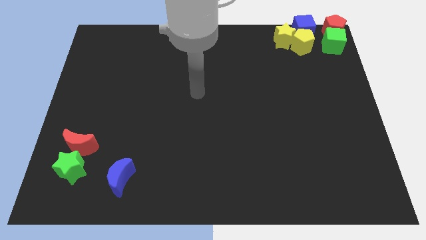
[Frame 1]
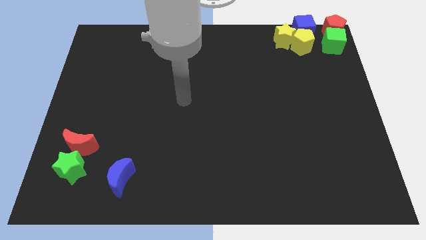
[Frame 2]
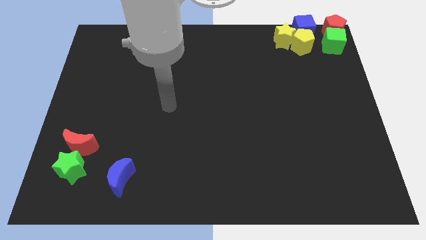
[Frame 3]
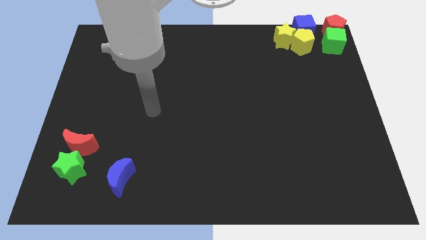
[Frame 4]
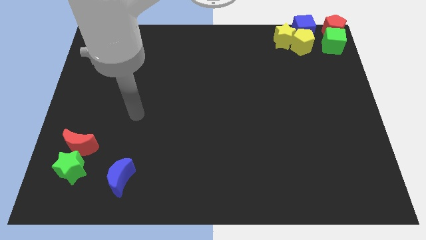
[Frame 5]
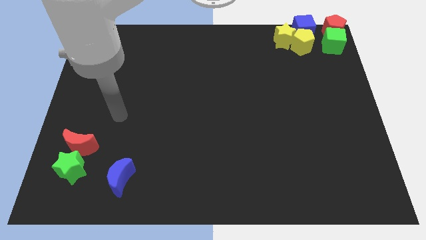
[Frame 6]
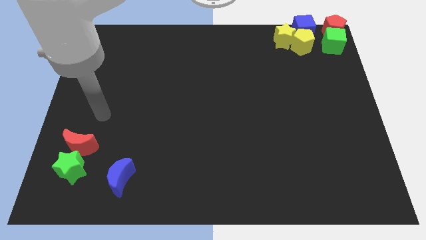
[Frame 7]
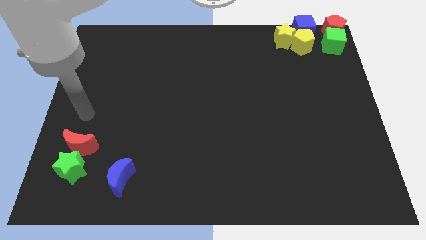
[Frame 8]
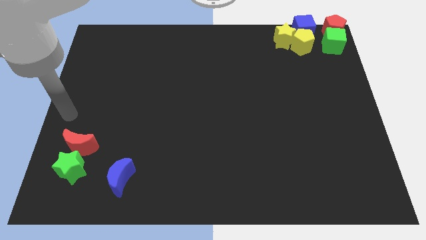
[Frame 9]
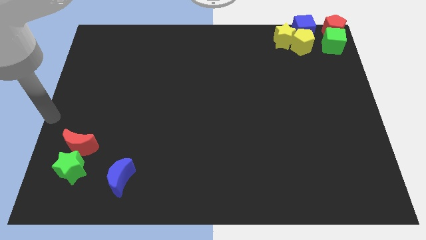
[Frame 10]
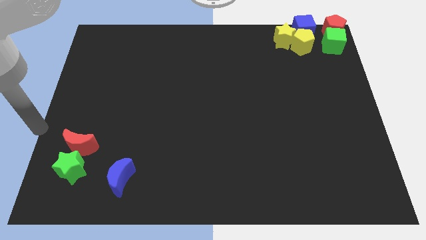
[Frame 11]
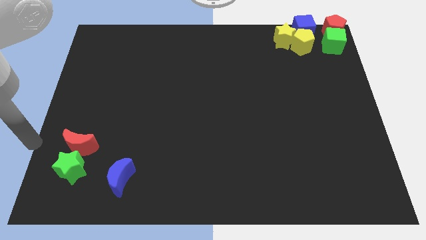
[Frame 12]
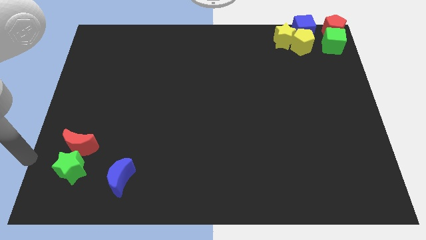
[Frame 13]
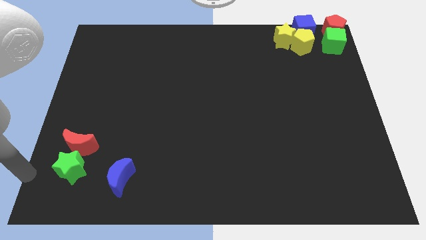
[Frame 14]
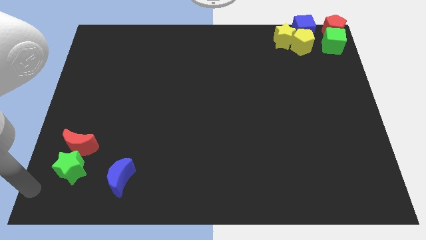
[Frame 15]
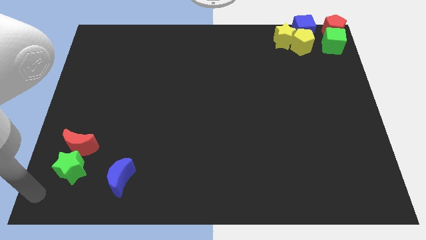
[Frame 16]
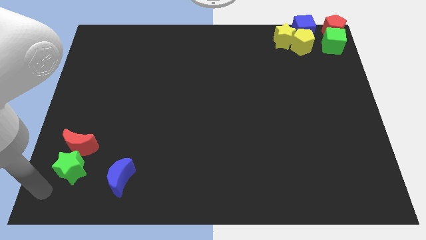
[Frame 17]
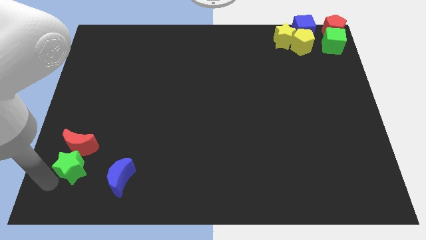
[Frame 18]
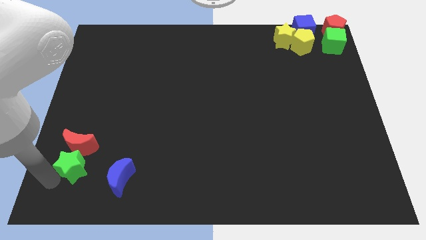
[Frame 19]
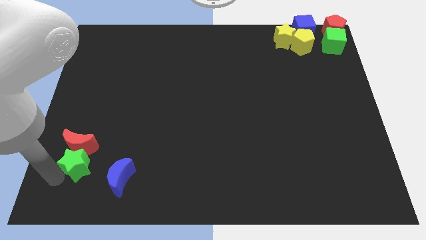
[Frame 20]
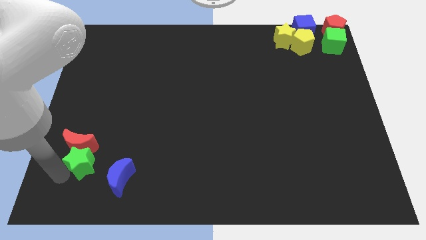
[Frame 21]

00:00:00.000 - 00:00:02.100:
touch the bottom of the green star

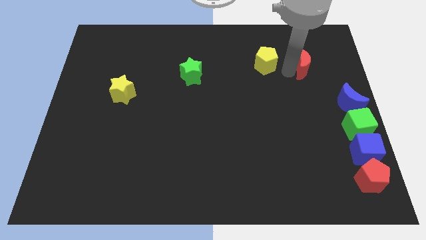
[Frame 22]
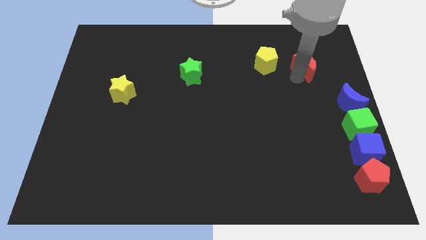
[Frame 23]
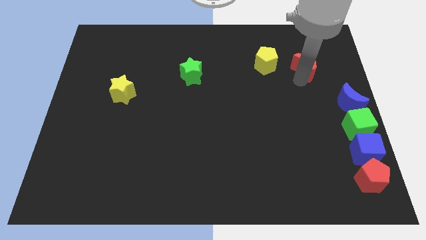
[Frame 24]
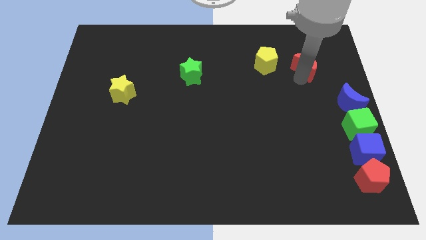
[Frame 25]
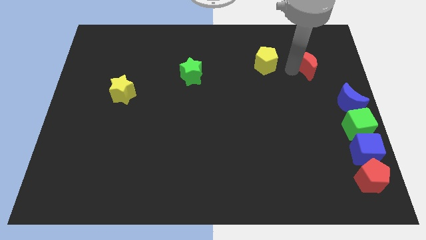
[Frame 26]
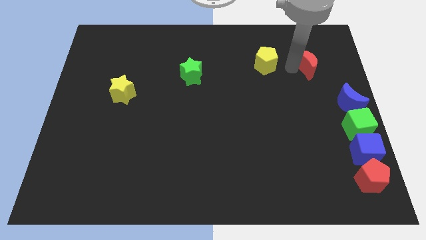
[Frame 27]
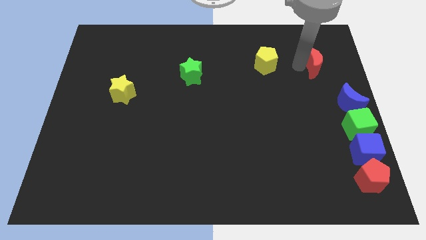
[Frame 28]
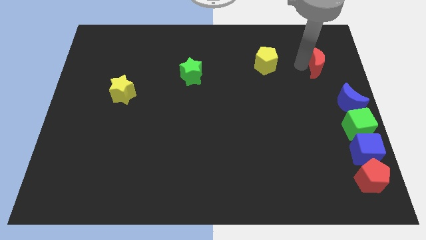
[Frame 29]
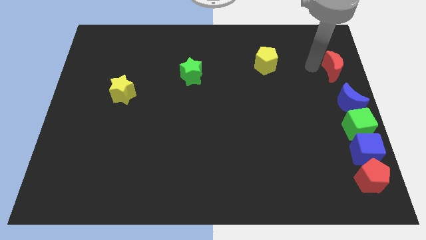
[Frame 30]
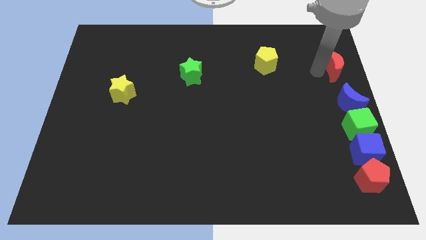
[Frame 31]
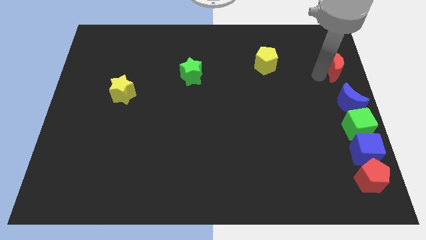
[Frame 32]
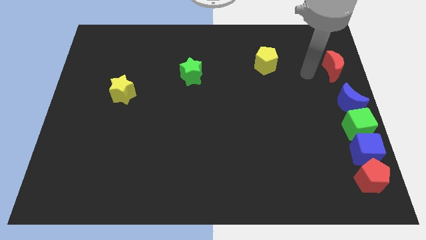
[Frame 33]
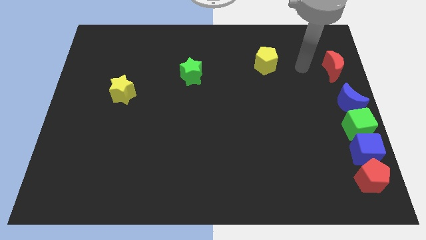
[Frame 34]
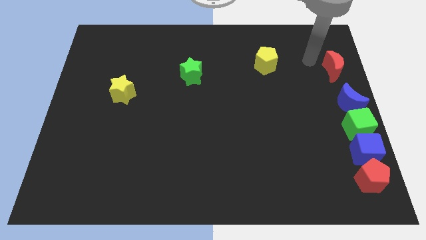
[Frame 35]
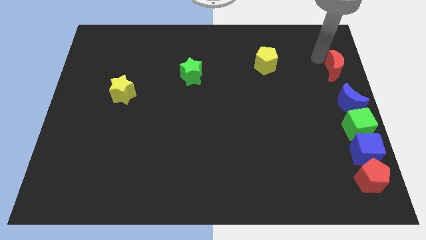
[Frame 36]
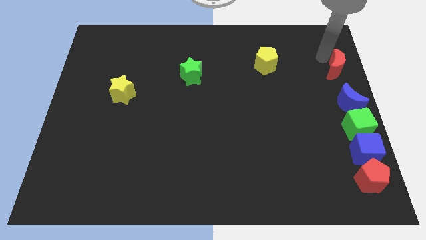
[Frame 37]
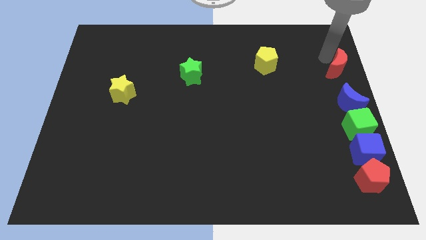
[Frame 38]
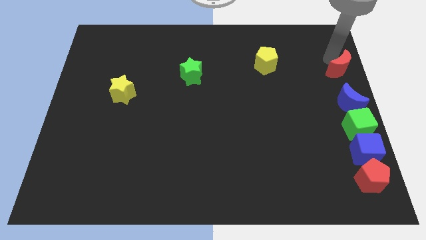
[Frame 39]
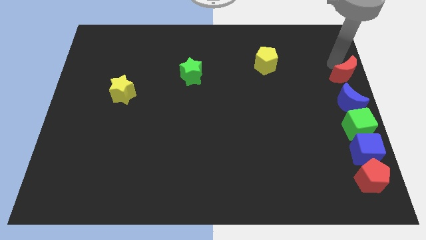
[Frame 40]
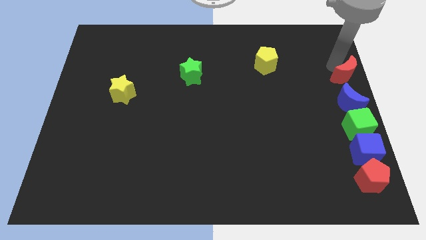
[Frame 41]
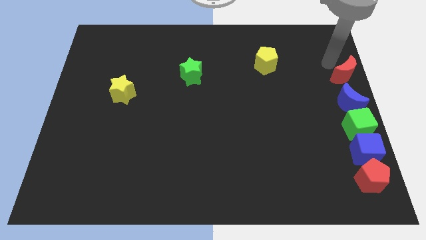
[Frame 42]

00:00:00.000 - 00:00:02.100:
place red moon on top of blue moon

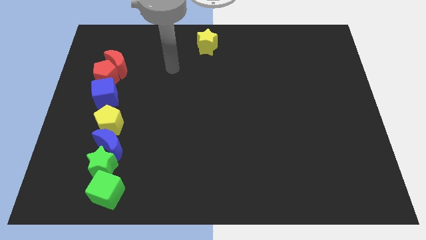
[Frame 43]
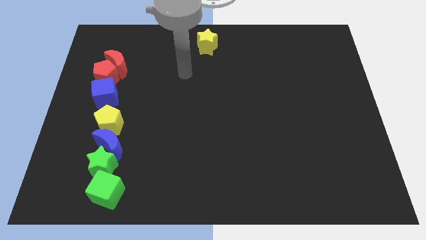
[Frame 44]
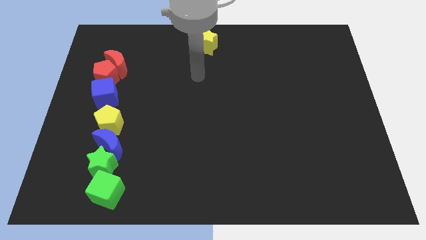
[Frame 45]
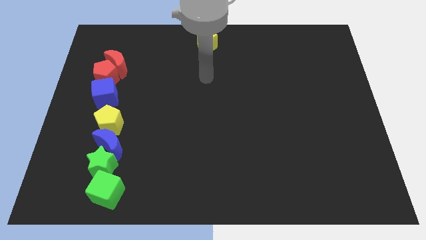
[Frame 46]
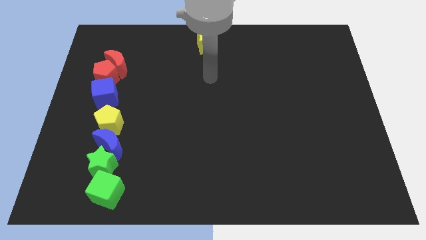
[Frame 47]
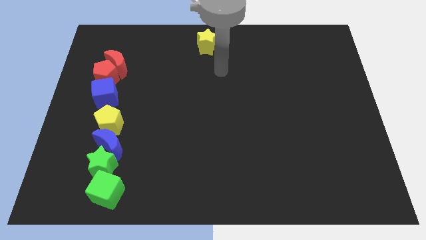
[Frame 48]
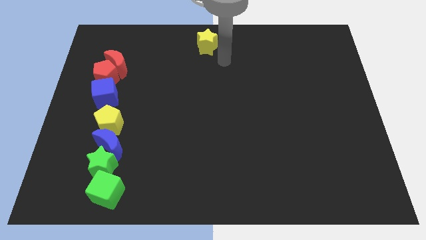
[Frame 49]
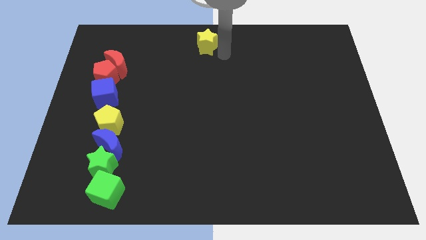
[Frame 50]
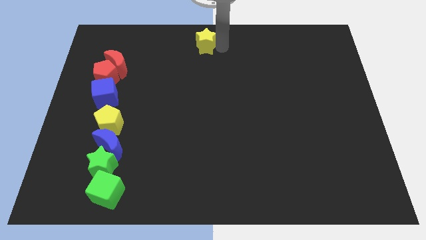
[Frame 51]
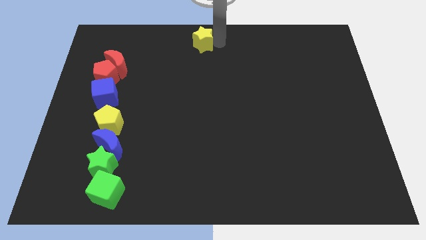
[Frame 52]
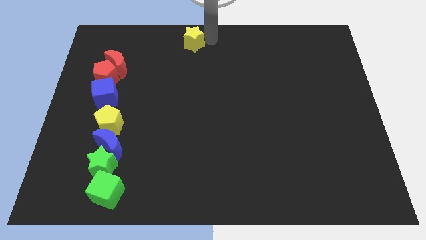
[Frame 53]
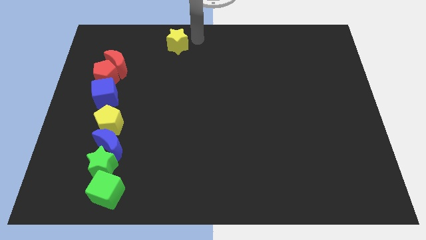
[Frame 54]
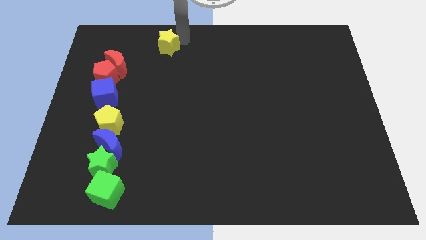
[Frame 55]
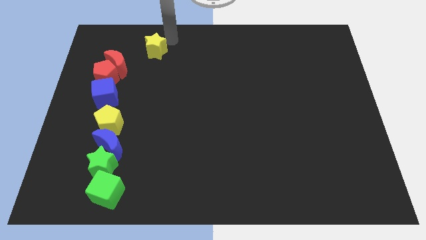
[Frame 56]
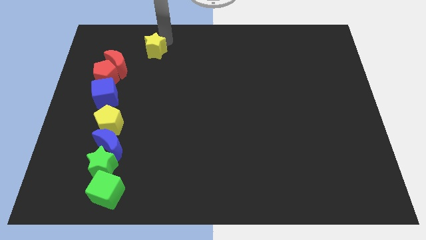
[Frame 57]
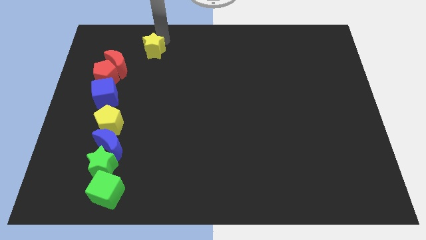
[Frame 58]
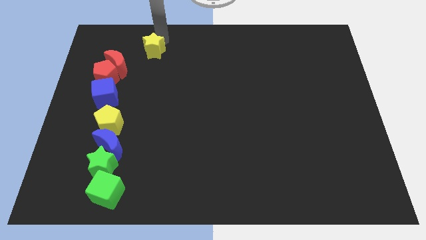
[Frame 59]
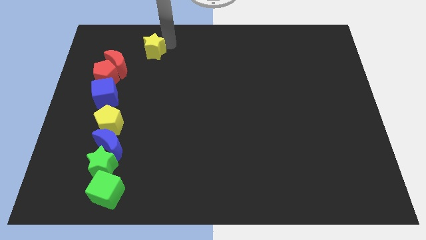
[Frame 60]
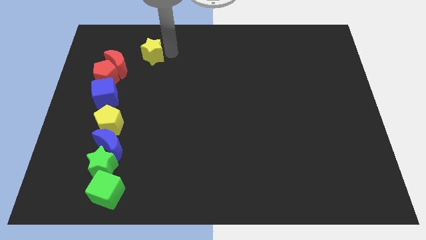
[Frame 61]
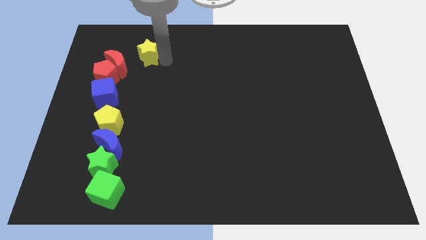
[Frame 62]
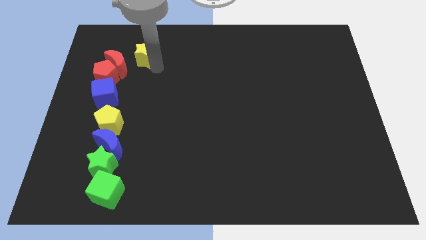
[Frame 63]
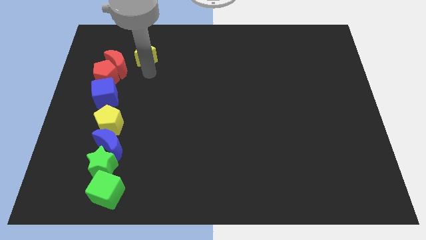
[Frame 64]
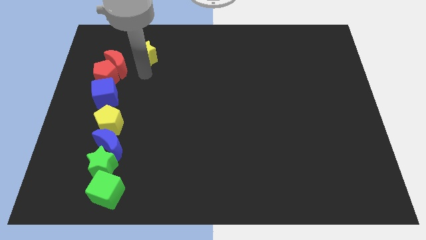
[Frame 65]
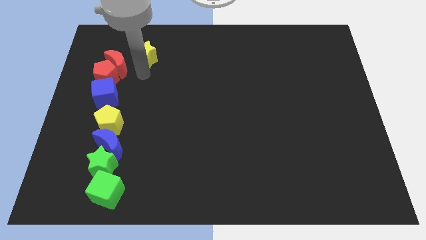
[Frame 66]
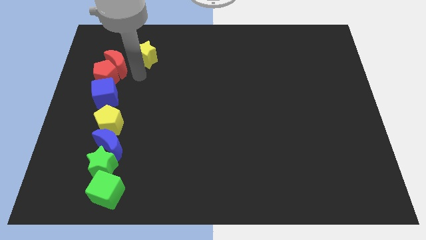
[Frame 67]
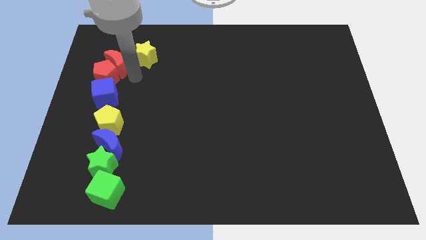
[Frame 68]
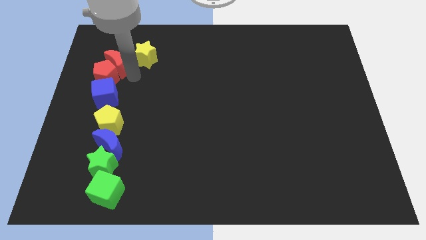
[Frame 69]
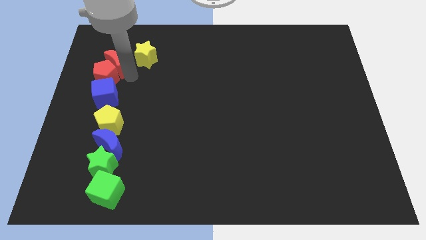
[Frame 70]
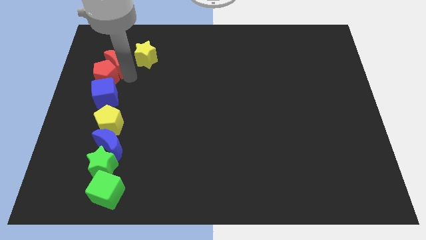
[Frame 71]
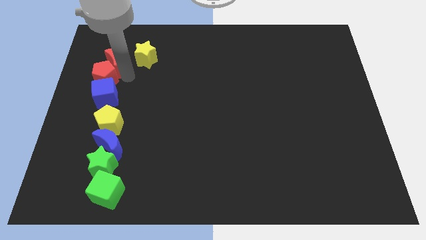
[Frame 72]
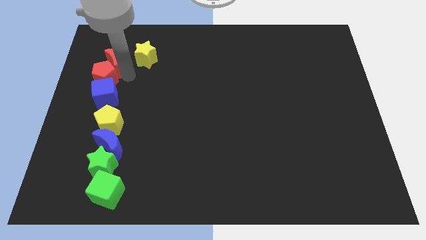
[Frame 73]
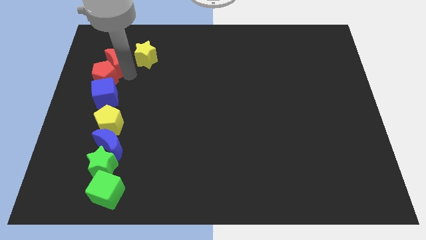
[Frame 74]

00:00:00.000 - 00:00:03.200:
push the yellow star to the top right side of the red moon

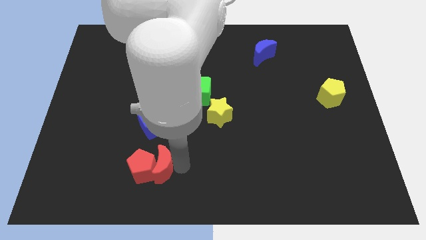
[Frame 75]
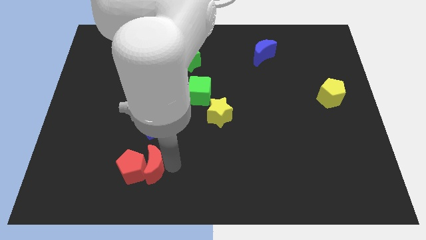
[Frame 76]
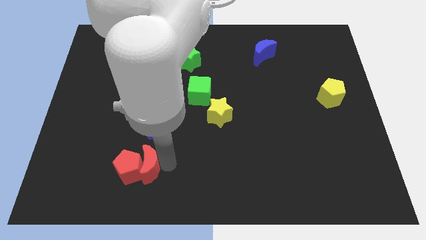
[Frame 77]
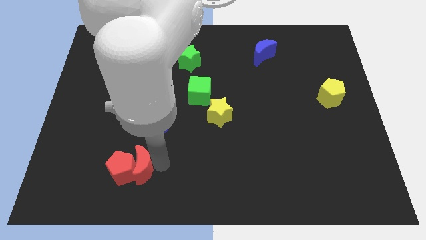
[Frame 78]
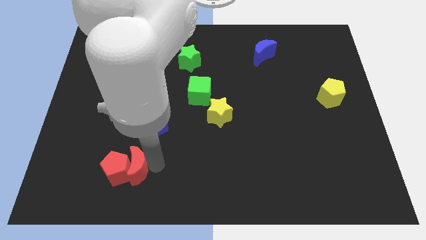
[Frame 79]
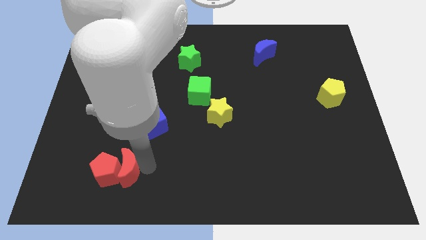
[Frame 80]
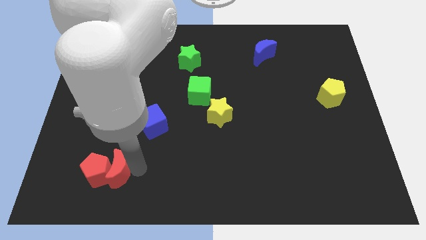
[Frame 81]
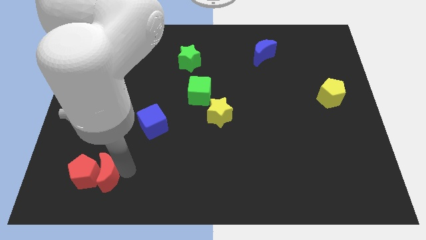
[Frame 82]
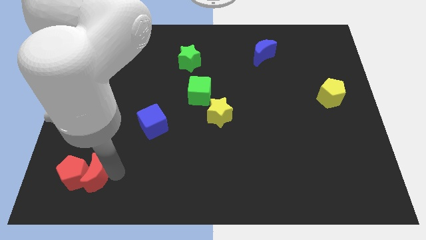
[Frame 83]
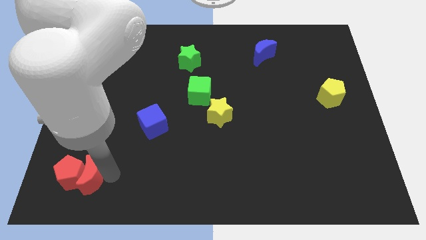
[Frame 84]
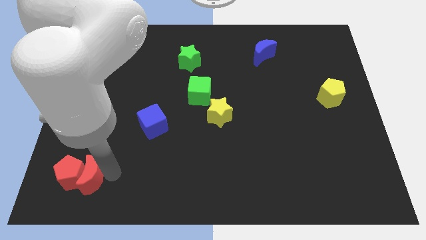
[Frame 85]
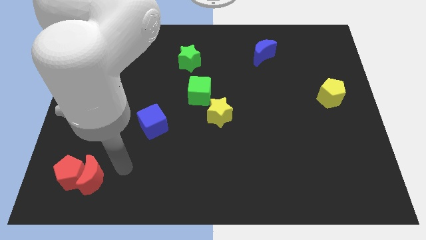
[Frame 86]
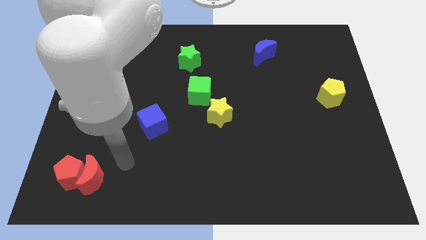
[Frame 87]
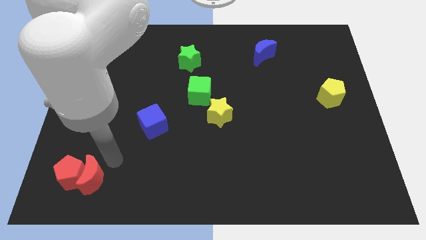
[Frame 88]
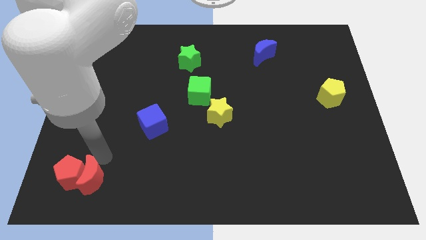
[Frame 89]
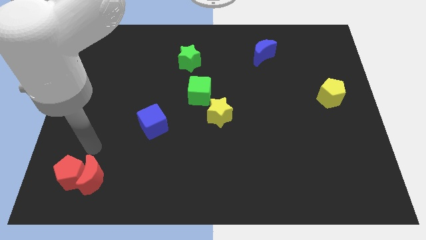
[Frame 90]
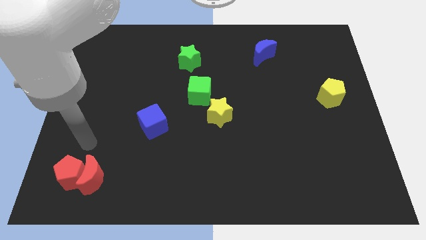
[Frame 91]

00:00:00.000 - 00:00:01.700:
push the red blocks toward bottom left of the board
